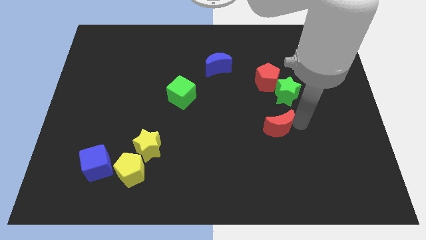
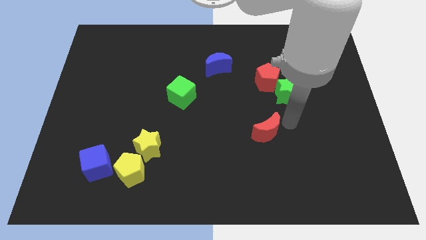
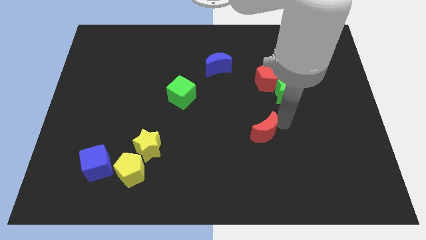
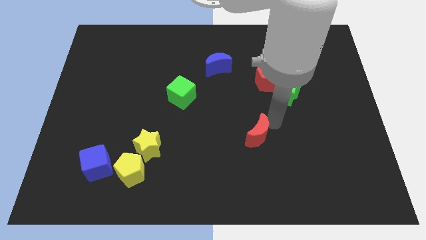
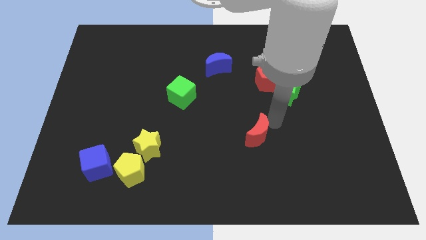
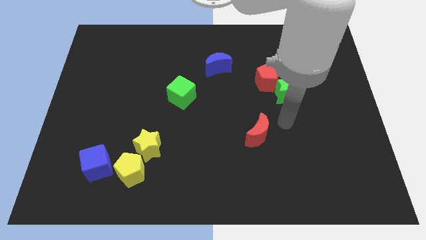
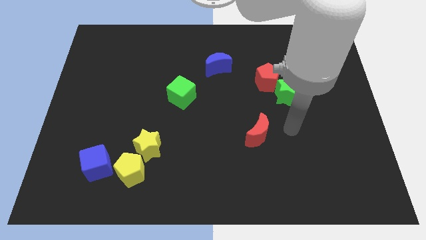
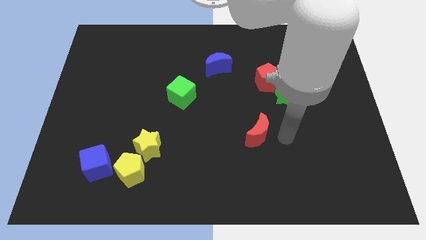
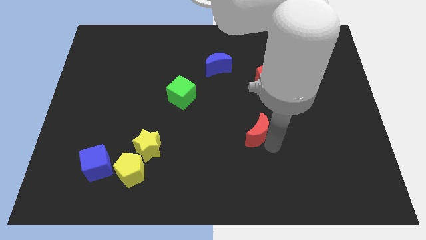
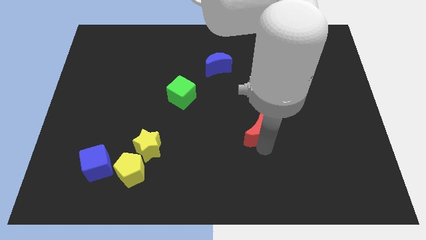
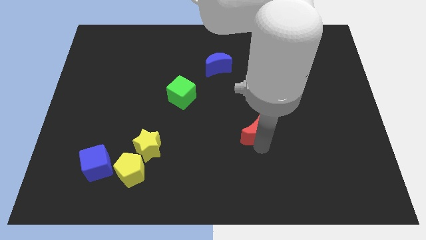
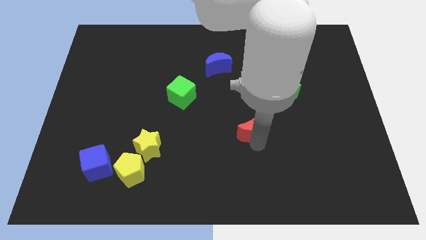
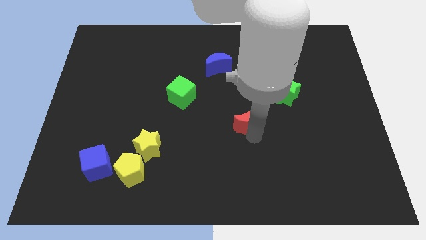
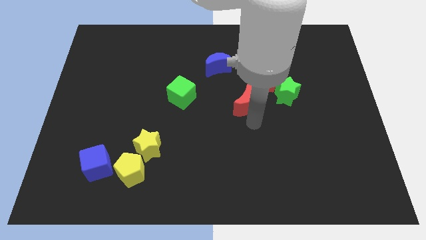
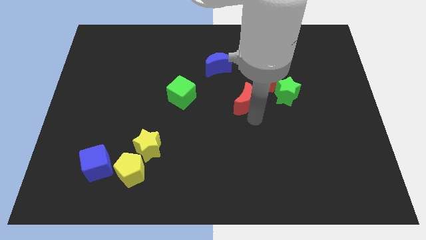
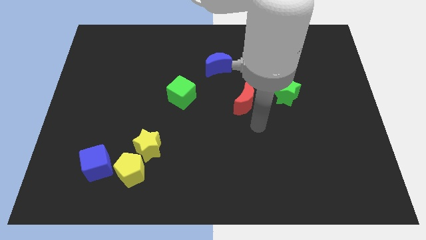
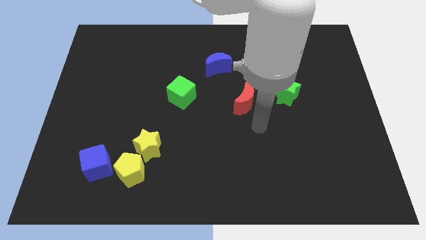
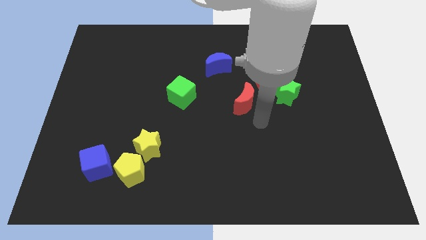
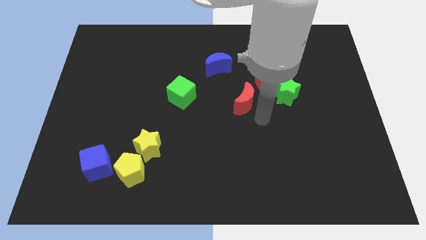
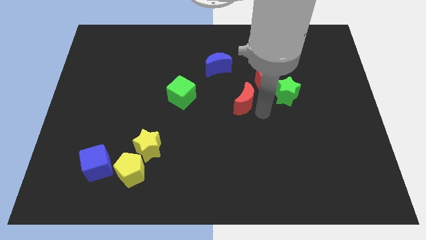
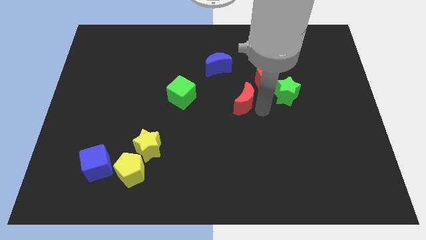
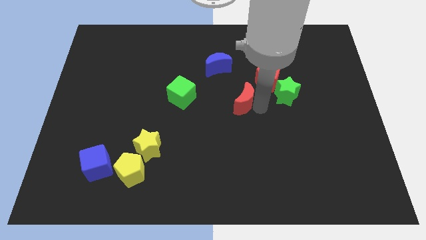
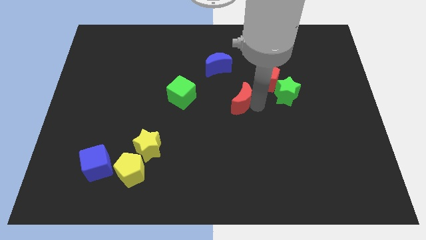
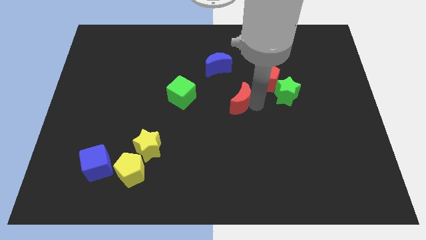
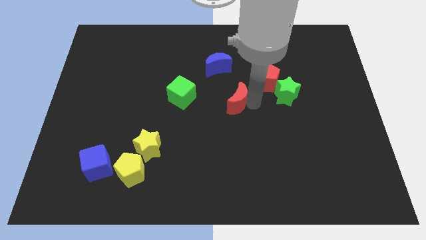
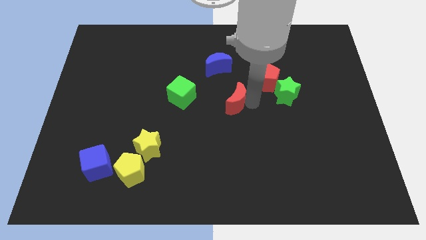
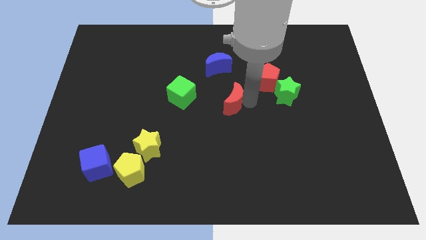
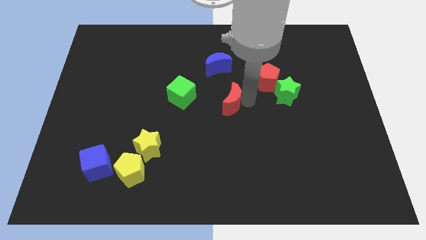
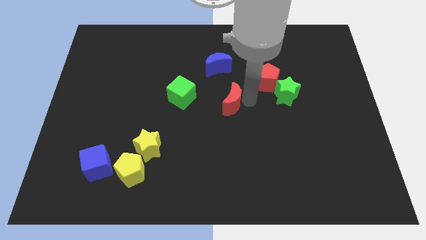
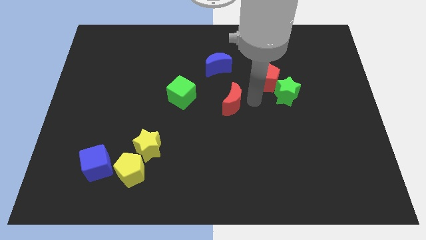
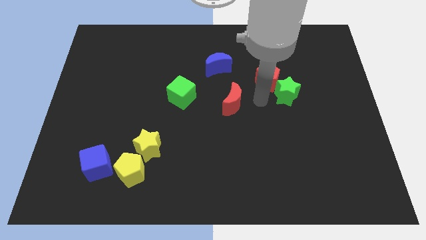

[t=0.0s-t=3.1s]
place red moon to the bottom of blue moon

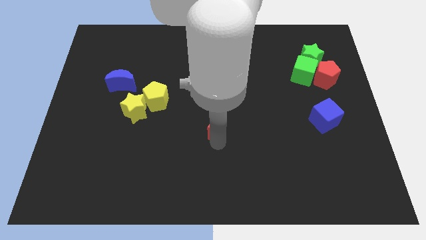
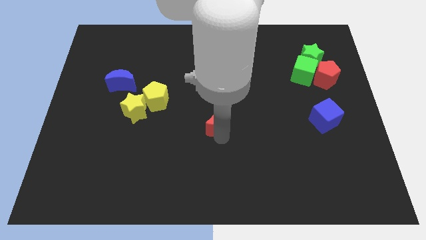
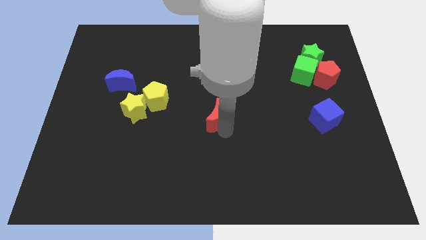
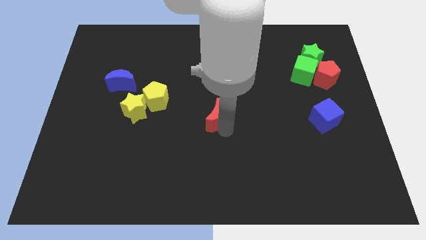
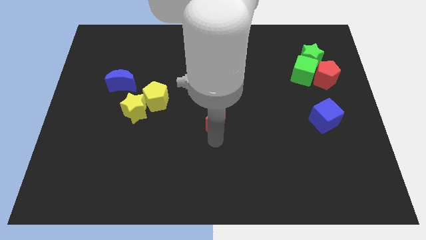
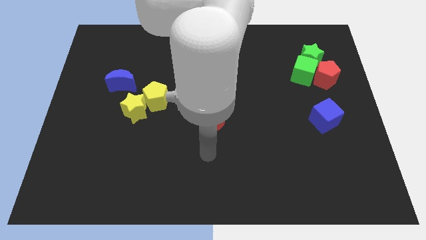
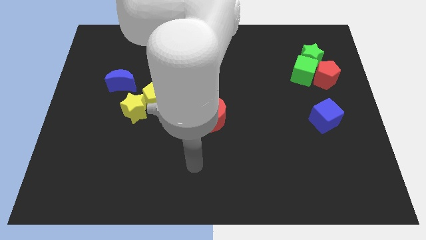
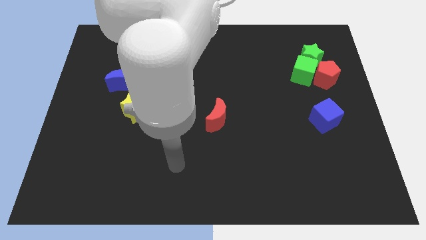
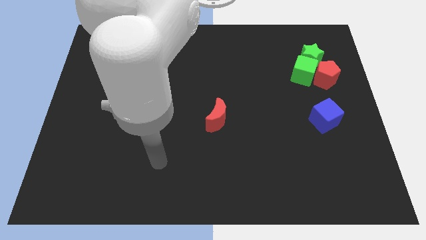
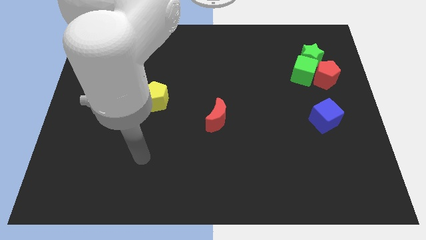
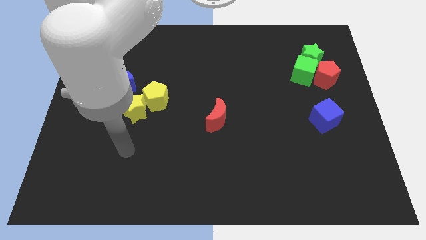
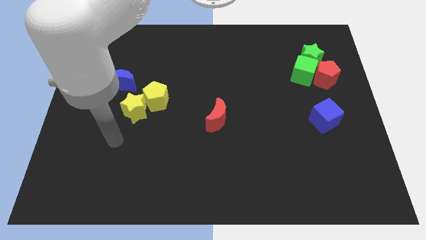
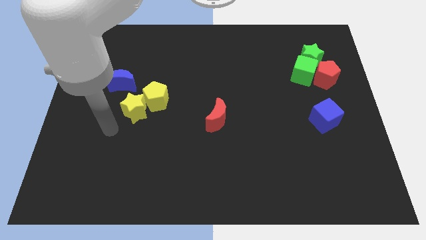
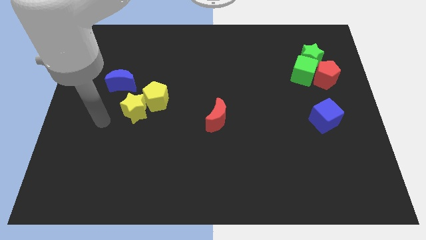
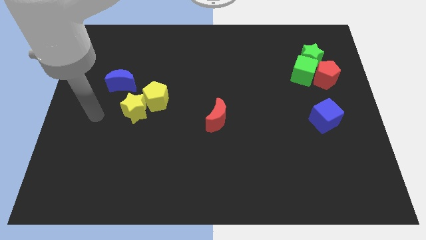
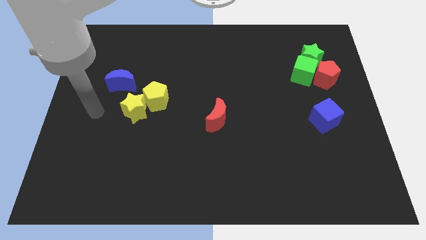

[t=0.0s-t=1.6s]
move the arm towards the yellow star

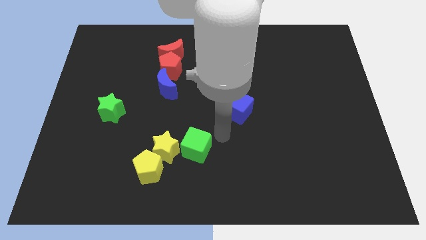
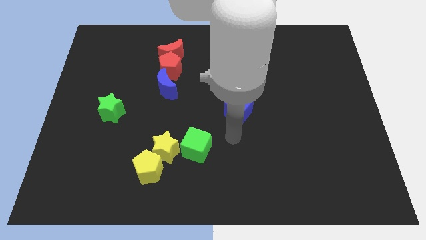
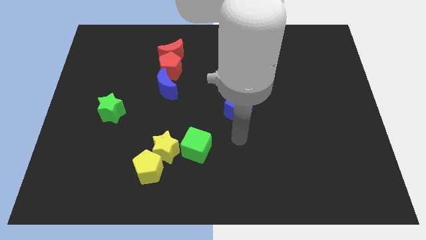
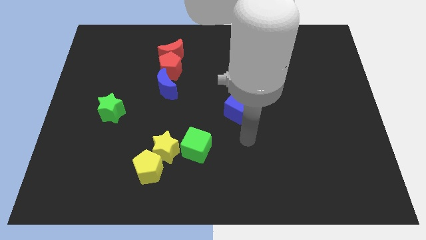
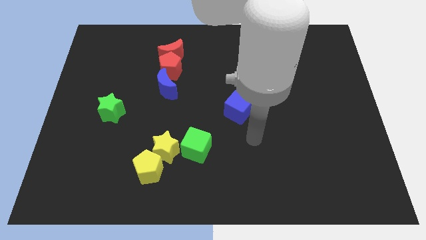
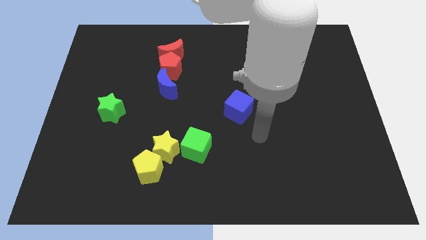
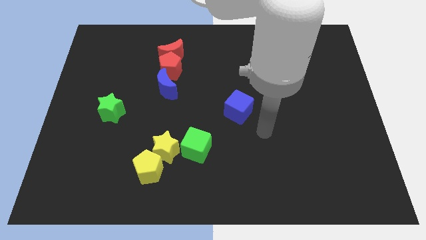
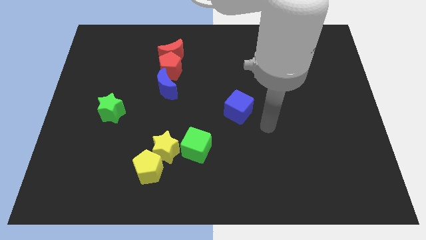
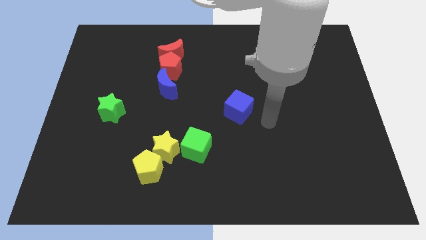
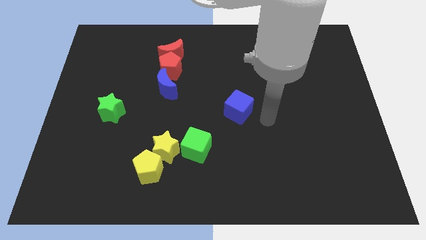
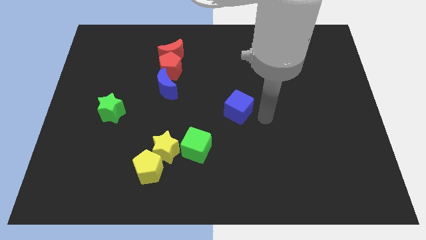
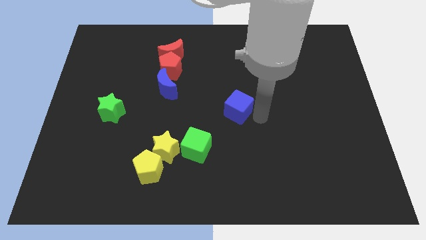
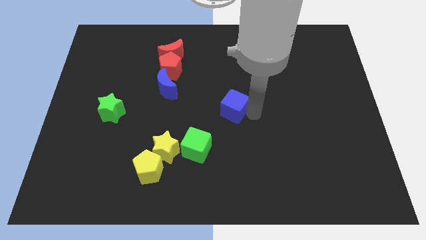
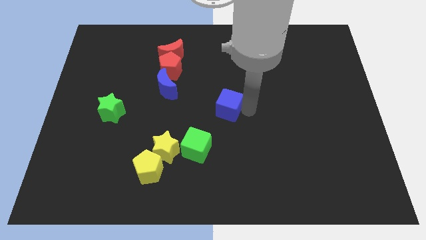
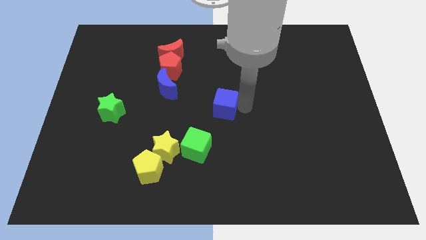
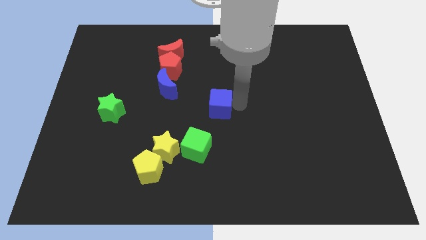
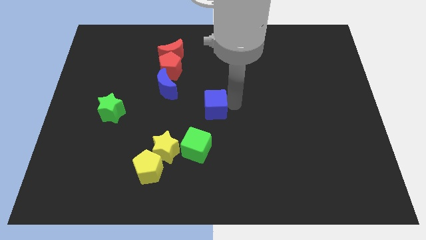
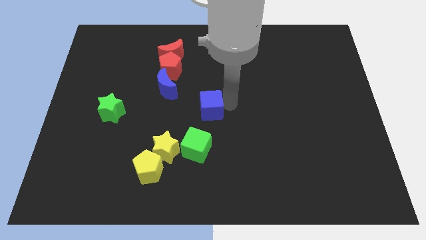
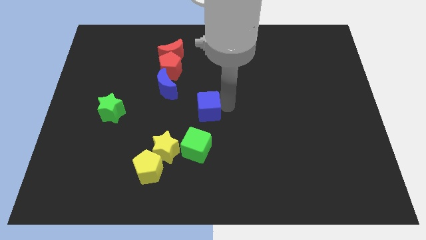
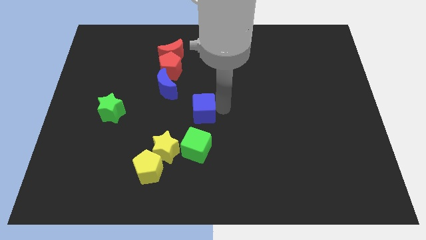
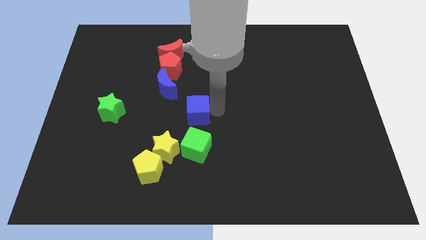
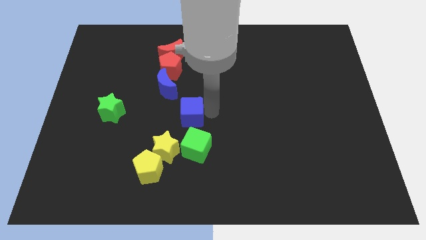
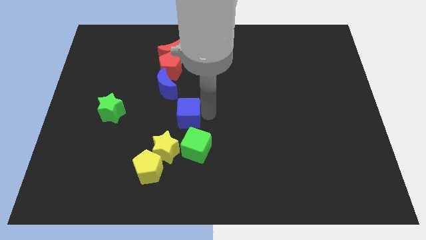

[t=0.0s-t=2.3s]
push the blue cube on top of green cube

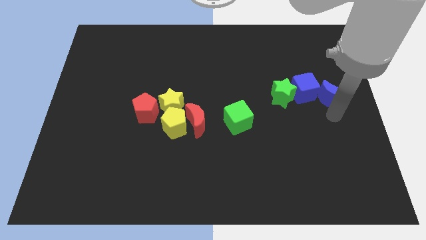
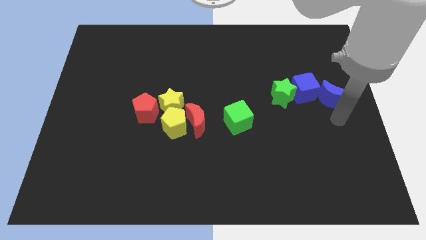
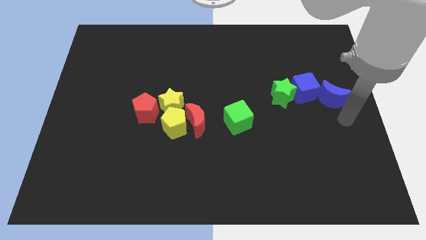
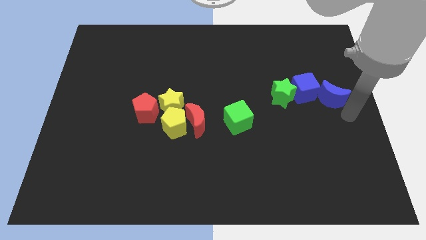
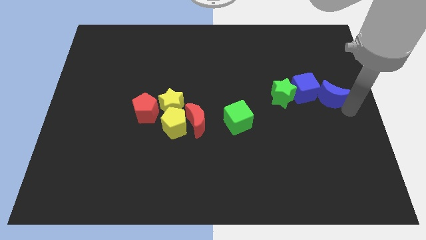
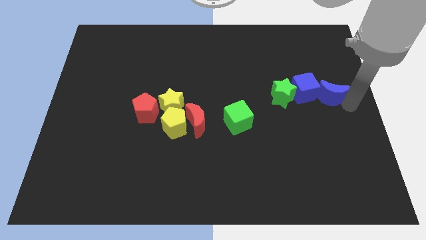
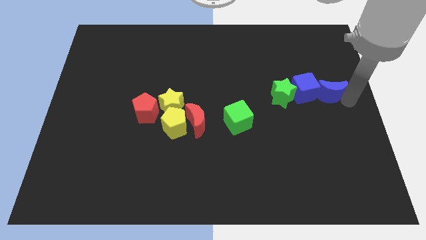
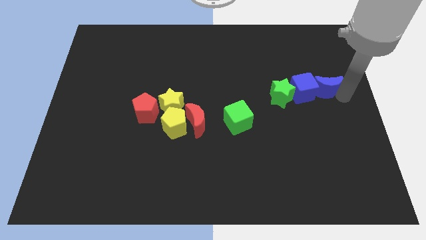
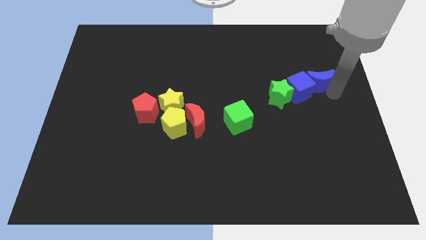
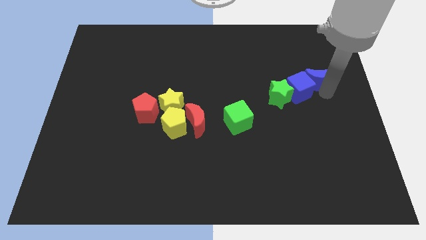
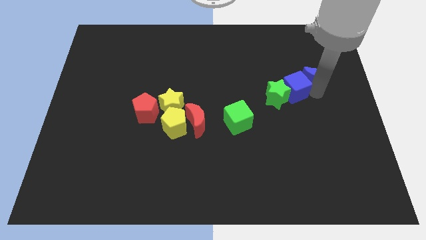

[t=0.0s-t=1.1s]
place the blue crescent right to the blue cube to form a diagonal line

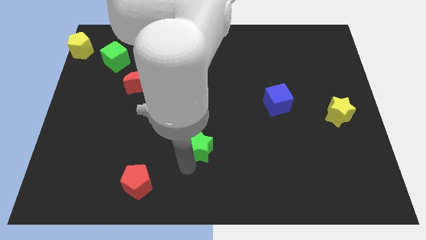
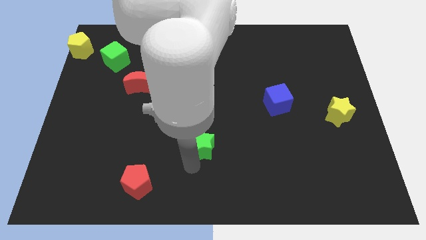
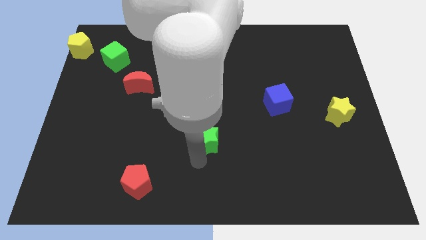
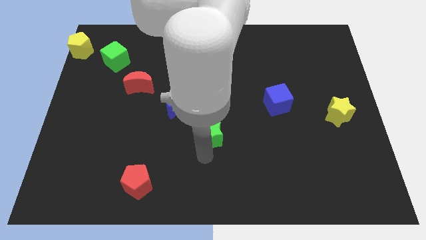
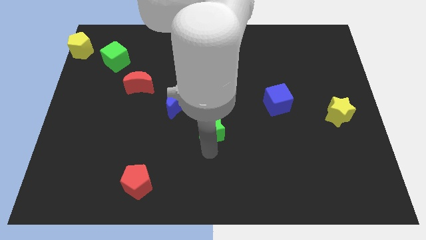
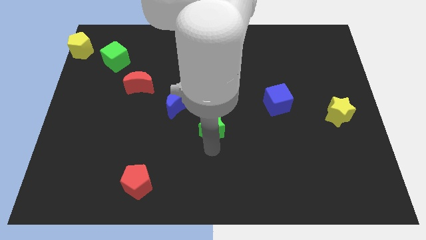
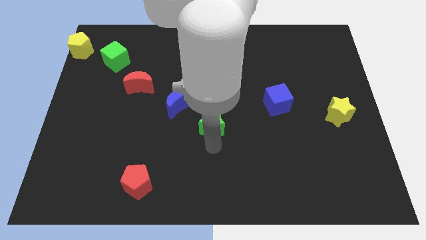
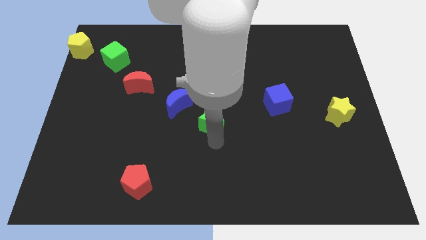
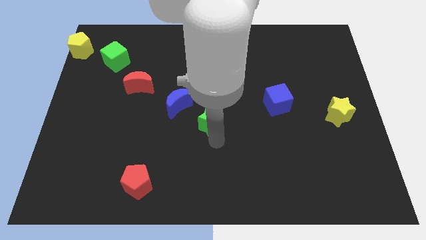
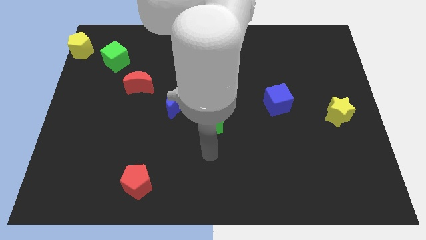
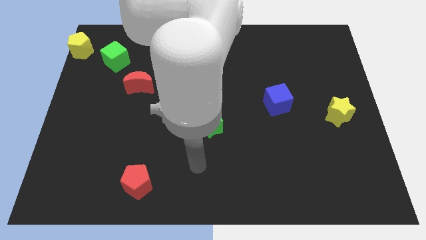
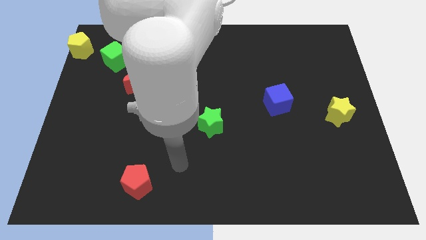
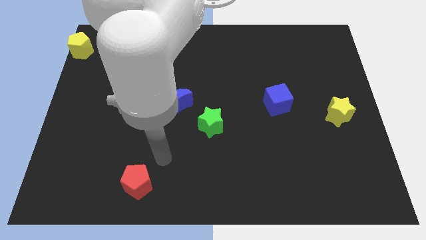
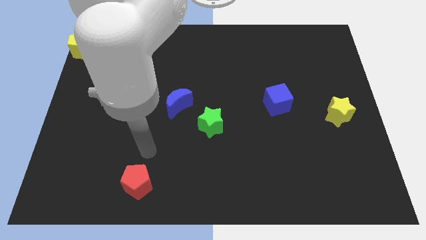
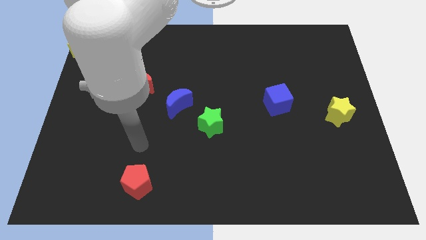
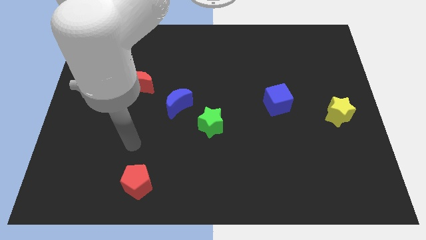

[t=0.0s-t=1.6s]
place green star diagonally to the bottom right of the blue moon
